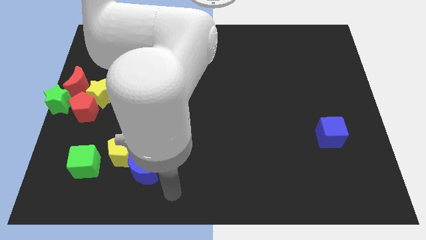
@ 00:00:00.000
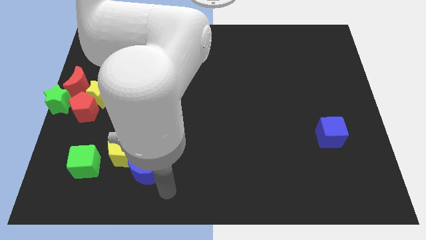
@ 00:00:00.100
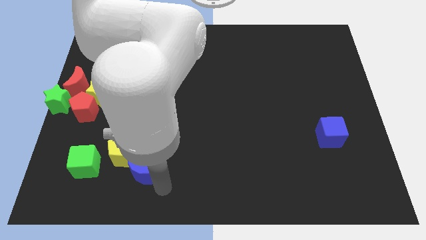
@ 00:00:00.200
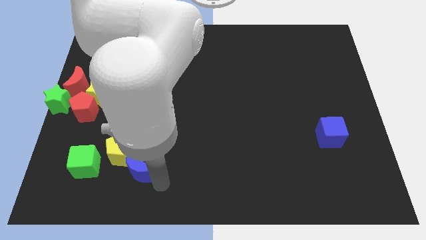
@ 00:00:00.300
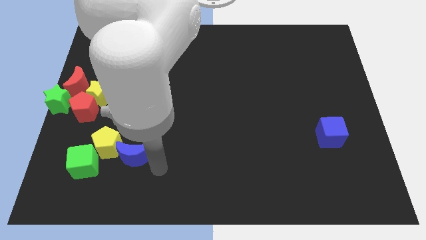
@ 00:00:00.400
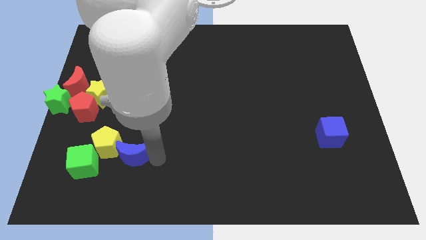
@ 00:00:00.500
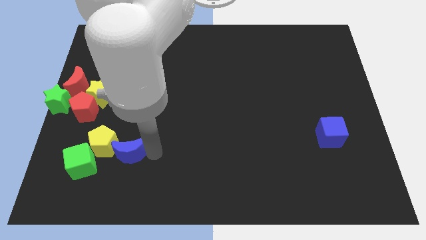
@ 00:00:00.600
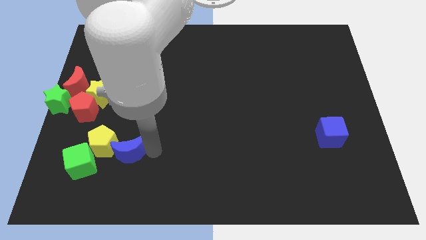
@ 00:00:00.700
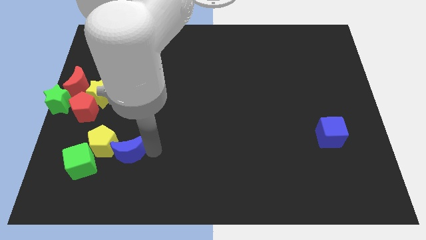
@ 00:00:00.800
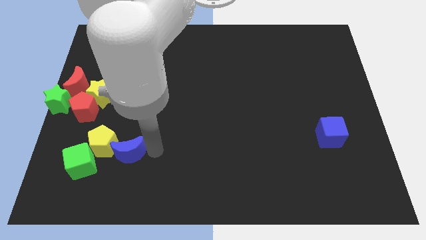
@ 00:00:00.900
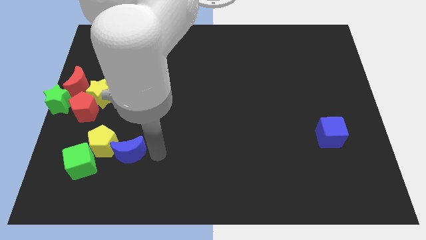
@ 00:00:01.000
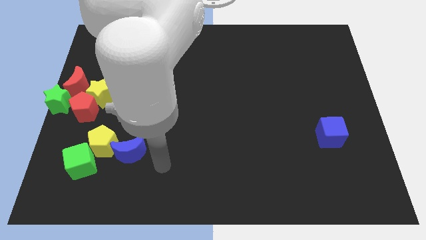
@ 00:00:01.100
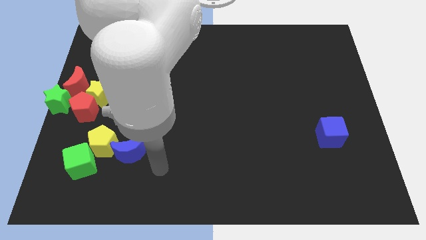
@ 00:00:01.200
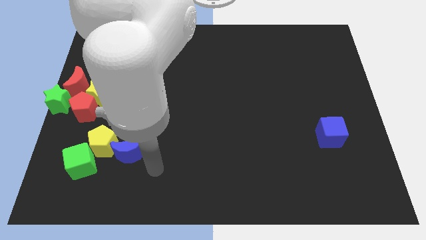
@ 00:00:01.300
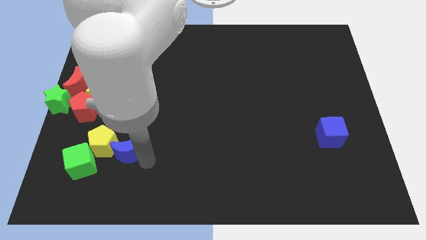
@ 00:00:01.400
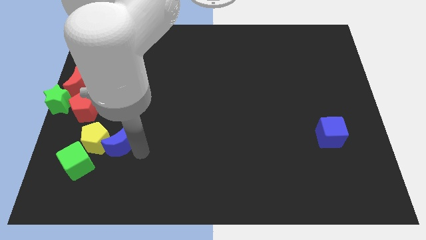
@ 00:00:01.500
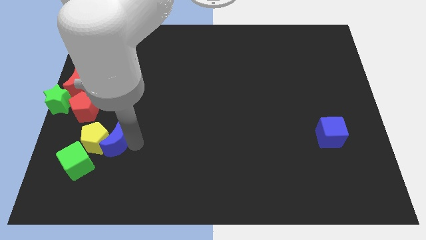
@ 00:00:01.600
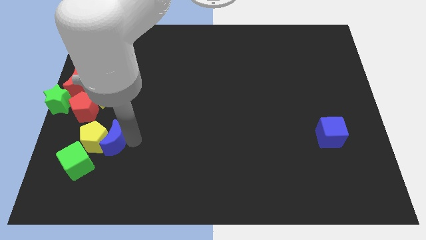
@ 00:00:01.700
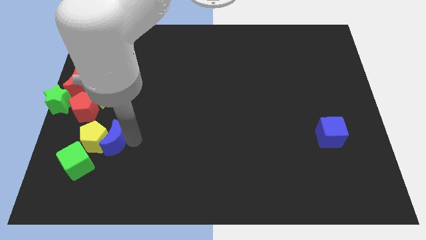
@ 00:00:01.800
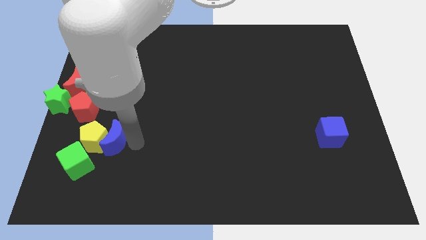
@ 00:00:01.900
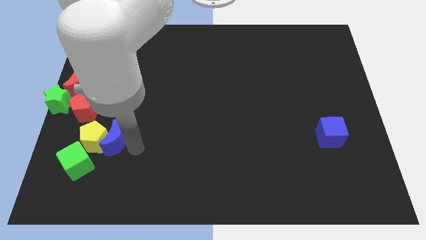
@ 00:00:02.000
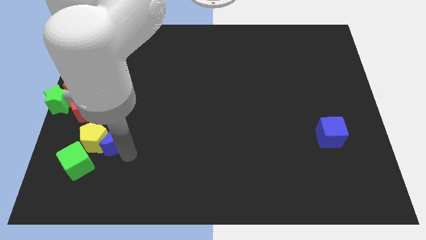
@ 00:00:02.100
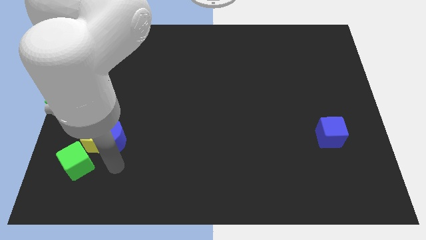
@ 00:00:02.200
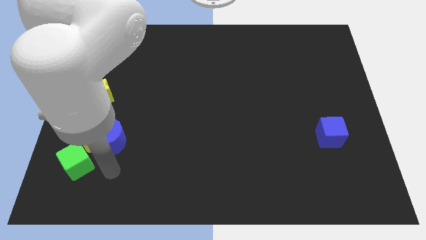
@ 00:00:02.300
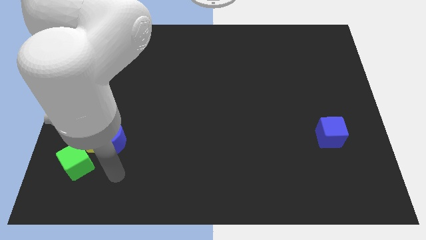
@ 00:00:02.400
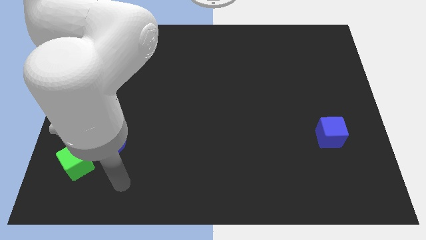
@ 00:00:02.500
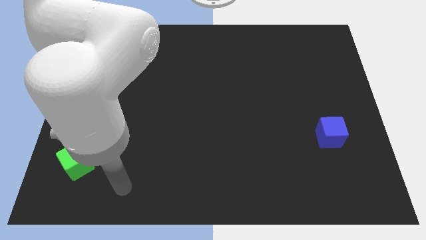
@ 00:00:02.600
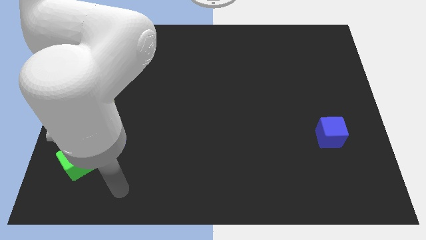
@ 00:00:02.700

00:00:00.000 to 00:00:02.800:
push the yellow pentagon into the green cube with the help of the blue crescent

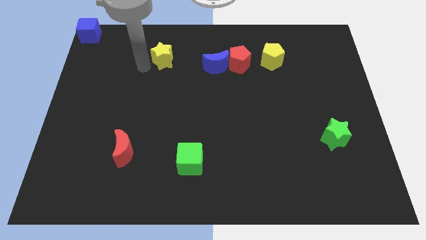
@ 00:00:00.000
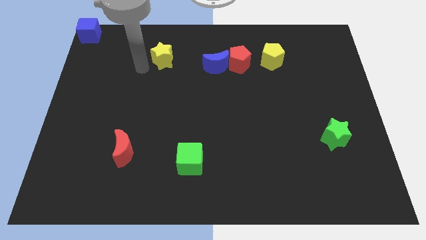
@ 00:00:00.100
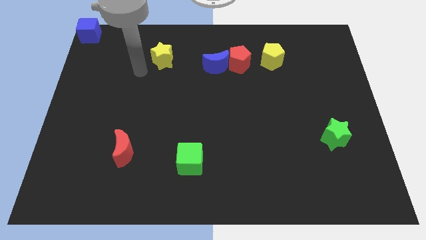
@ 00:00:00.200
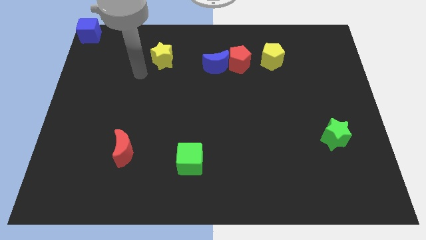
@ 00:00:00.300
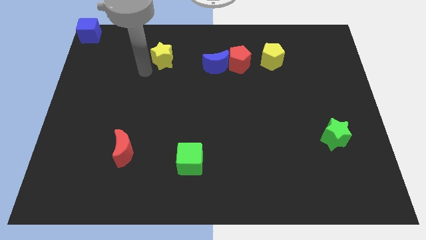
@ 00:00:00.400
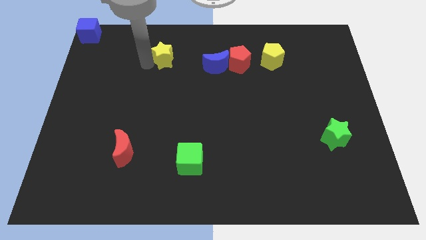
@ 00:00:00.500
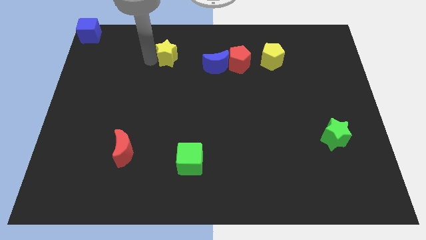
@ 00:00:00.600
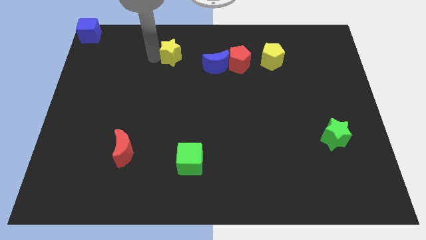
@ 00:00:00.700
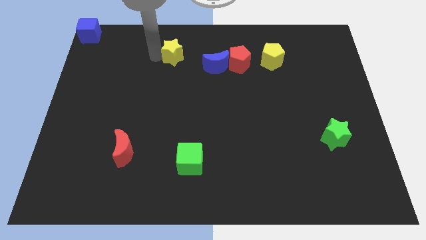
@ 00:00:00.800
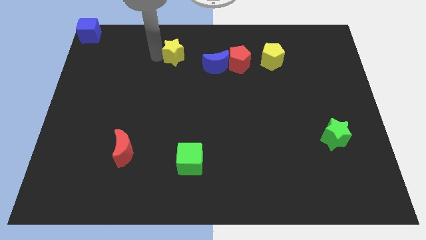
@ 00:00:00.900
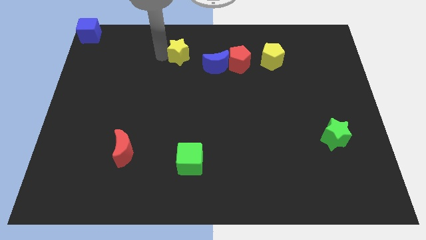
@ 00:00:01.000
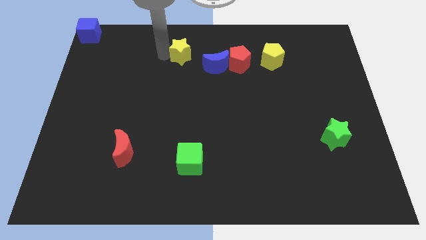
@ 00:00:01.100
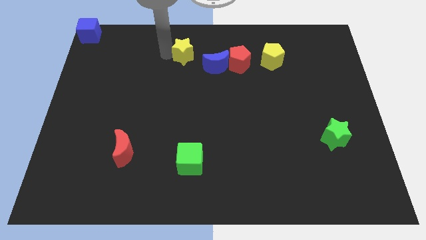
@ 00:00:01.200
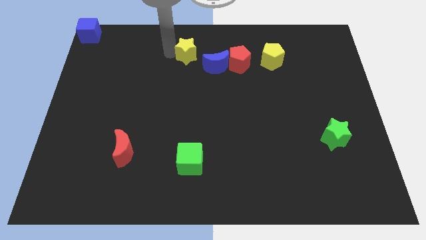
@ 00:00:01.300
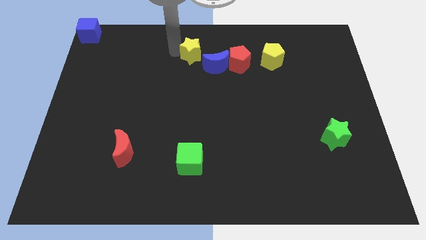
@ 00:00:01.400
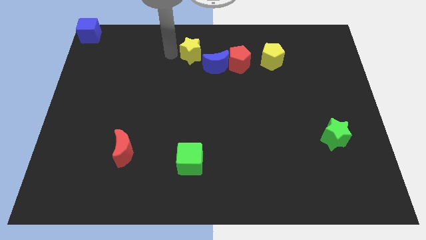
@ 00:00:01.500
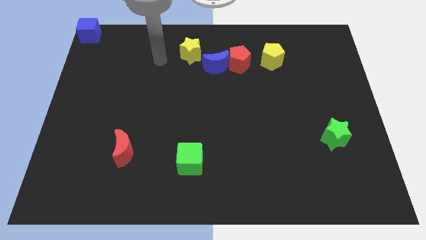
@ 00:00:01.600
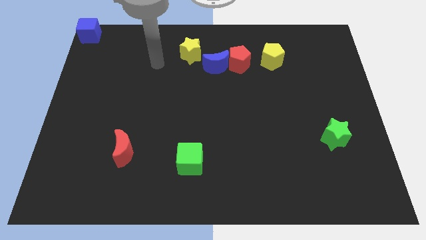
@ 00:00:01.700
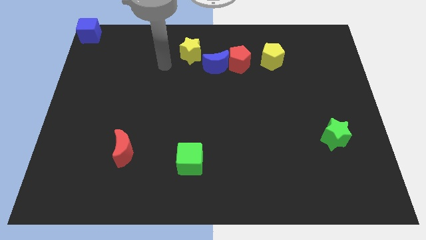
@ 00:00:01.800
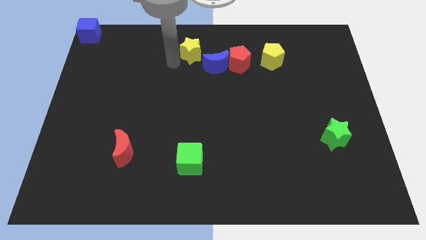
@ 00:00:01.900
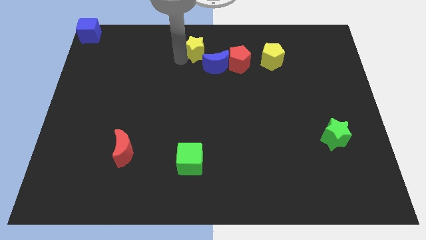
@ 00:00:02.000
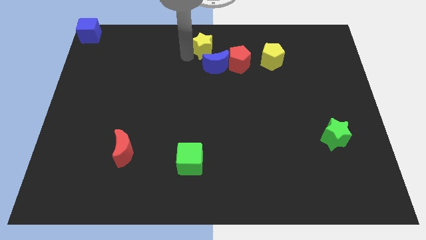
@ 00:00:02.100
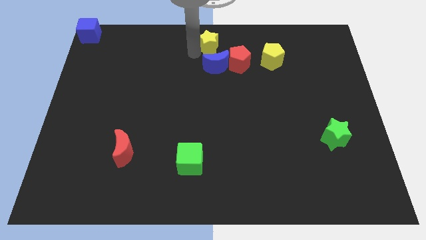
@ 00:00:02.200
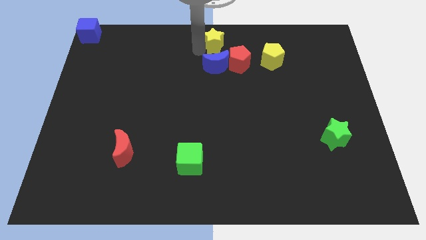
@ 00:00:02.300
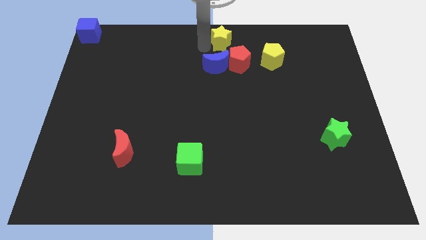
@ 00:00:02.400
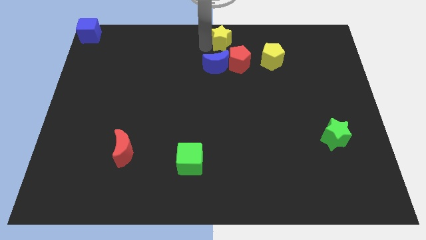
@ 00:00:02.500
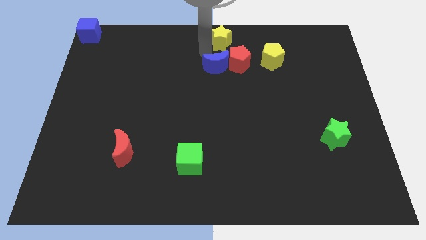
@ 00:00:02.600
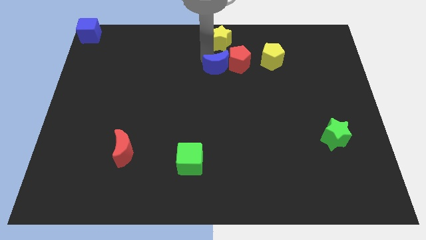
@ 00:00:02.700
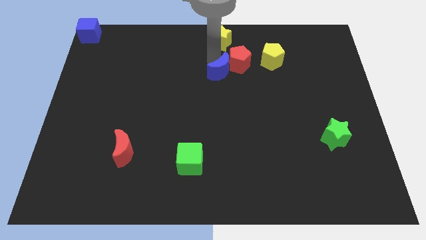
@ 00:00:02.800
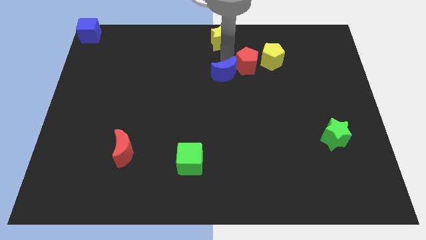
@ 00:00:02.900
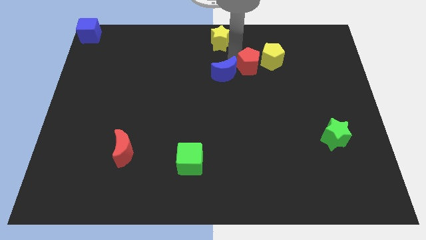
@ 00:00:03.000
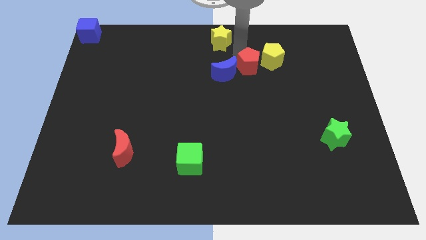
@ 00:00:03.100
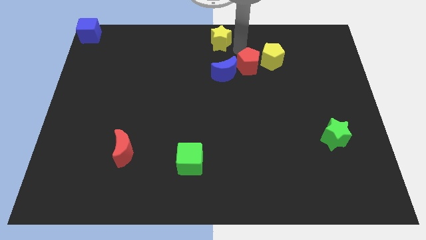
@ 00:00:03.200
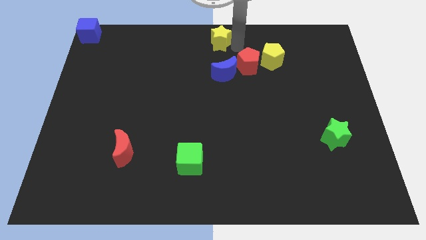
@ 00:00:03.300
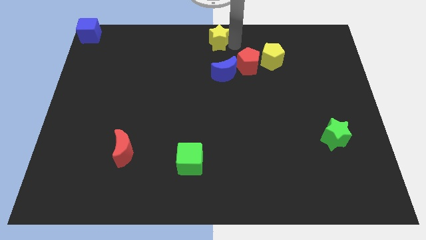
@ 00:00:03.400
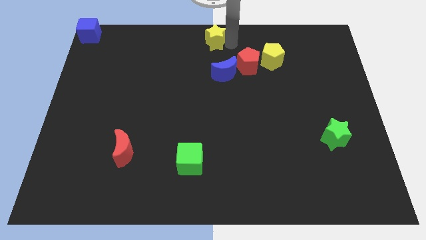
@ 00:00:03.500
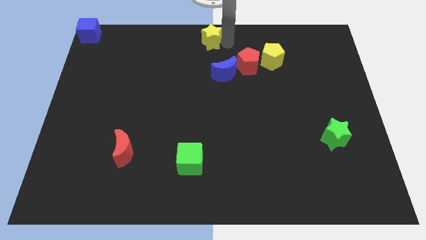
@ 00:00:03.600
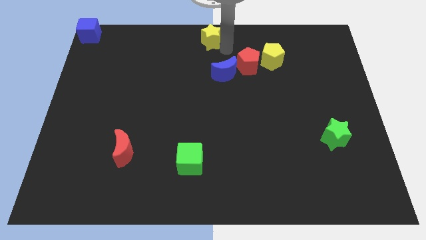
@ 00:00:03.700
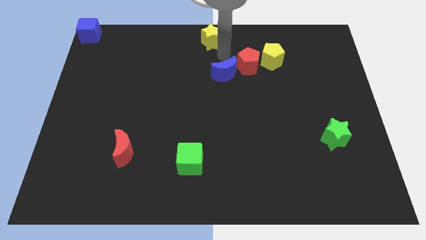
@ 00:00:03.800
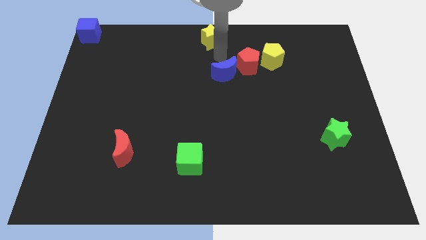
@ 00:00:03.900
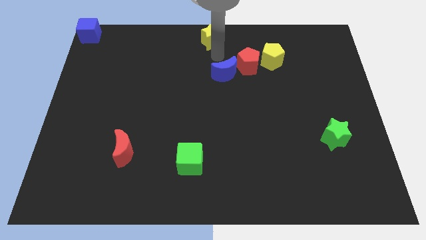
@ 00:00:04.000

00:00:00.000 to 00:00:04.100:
push the yellow star to the top center

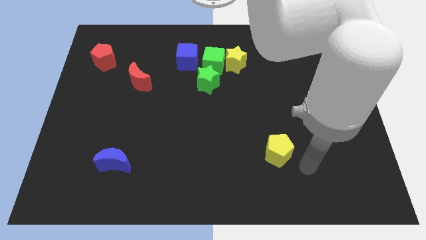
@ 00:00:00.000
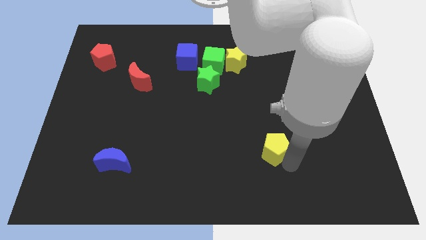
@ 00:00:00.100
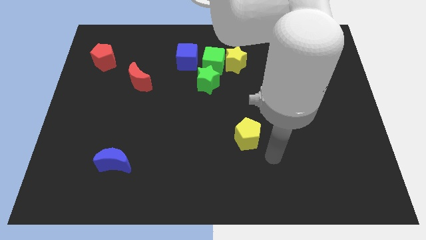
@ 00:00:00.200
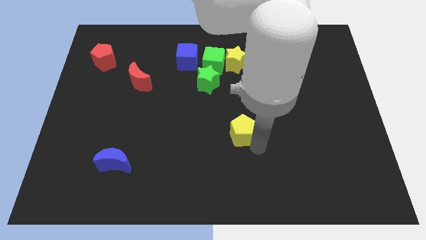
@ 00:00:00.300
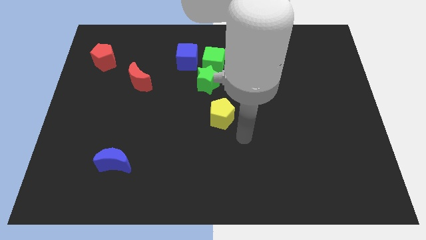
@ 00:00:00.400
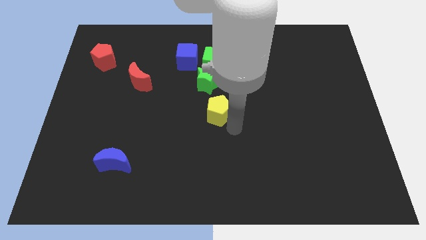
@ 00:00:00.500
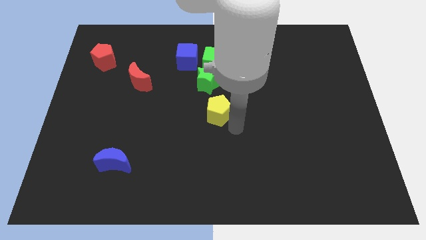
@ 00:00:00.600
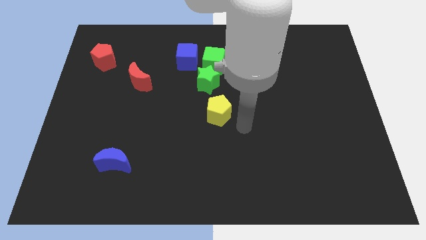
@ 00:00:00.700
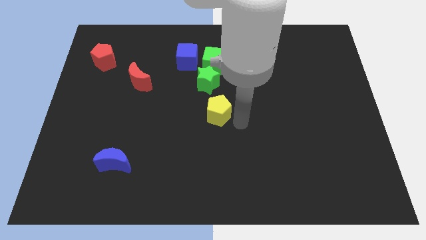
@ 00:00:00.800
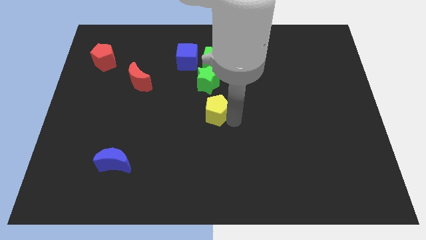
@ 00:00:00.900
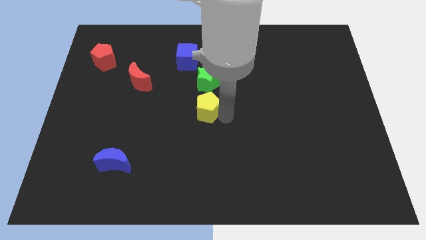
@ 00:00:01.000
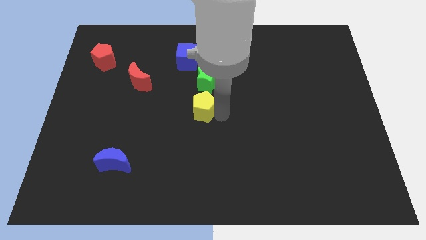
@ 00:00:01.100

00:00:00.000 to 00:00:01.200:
place the yellow pentagon at the center of the board

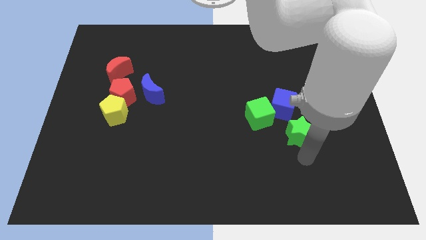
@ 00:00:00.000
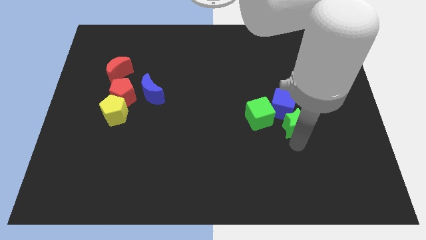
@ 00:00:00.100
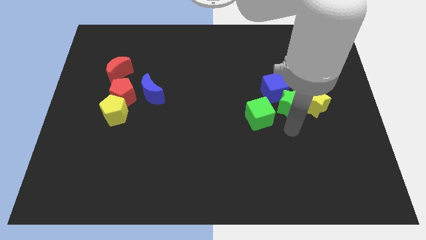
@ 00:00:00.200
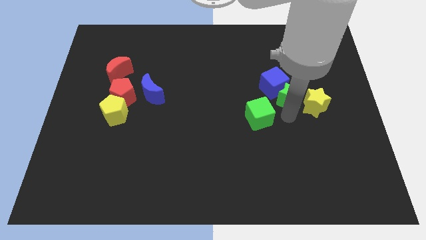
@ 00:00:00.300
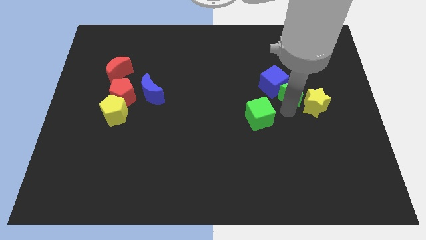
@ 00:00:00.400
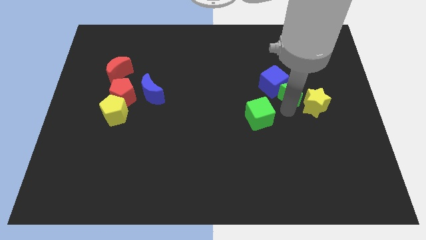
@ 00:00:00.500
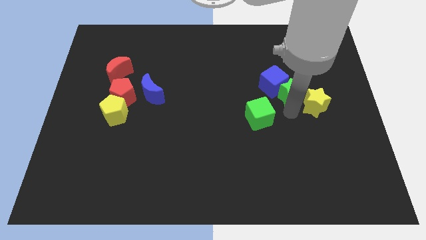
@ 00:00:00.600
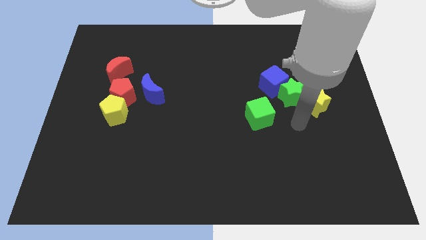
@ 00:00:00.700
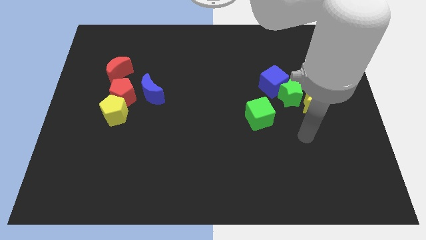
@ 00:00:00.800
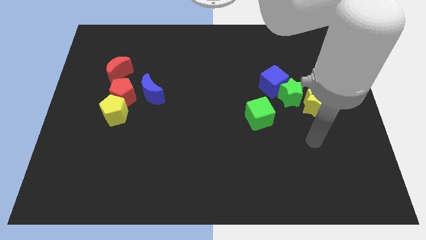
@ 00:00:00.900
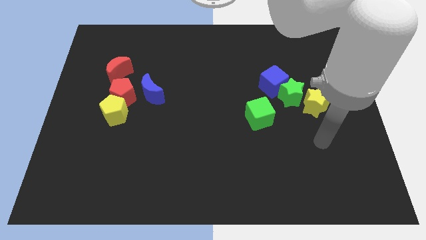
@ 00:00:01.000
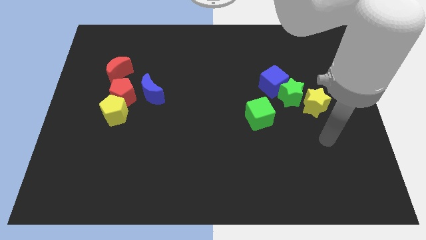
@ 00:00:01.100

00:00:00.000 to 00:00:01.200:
push the green star into the blue cube towards the top
